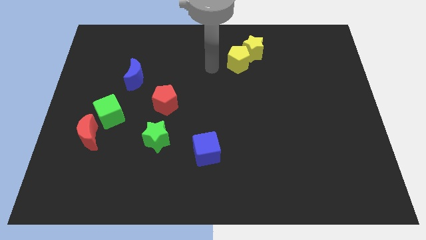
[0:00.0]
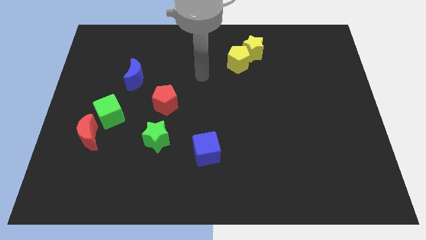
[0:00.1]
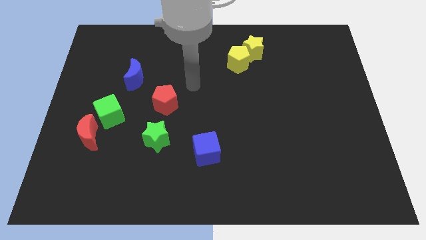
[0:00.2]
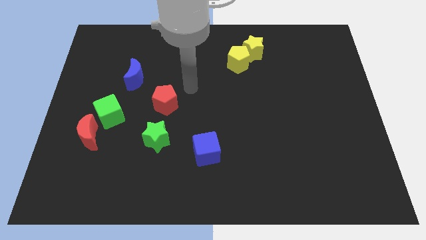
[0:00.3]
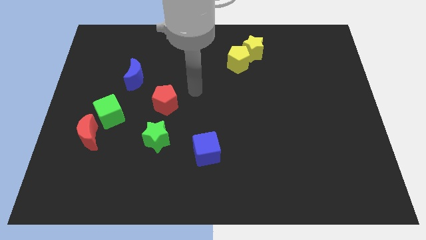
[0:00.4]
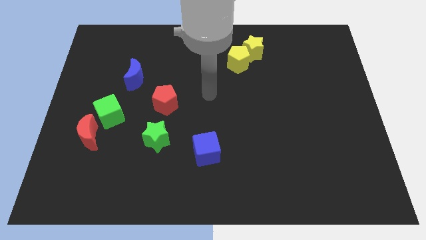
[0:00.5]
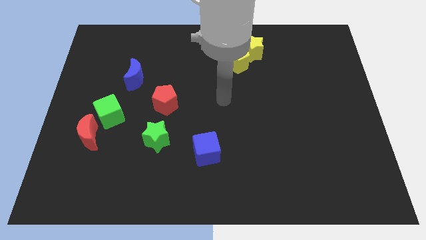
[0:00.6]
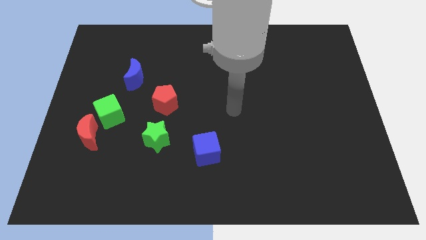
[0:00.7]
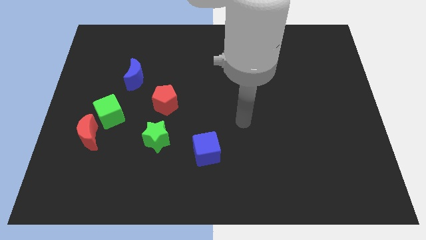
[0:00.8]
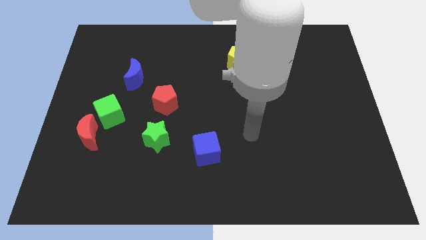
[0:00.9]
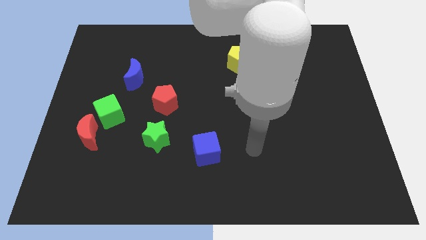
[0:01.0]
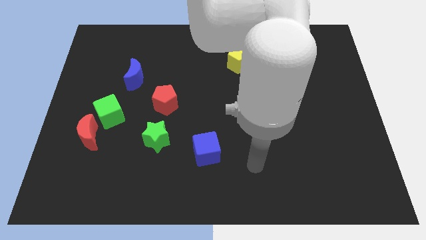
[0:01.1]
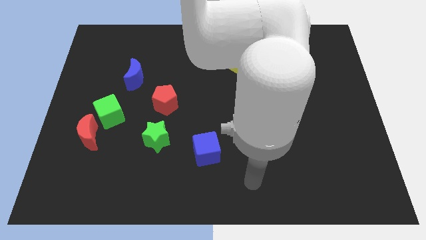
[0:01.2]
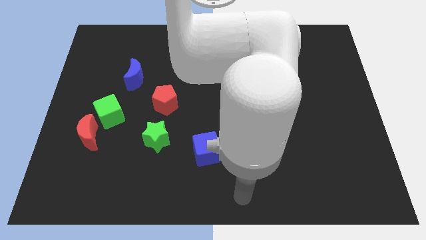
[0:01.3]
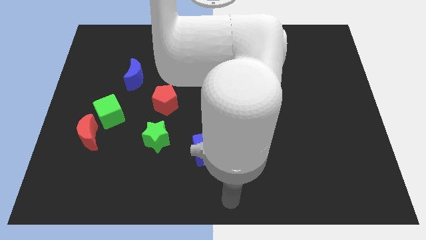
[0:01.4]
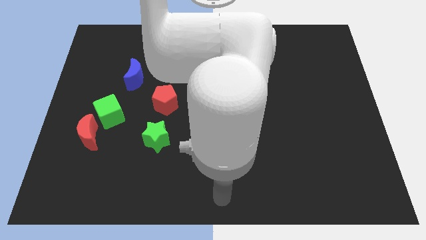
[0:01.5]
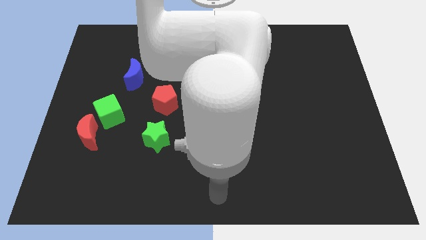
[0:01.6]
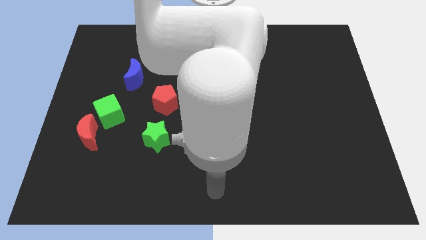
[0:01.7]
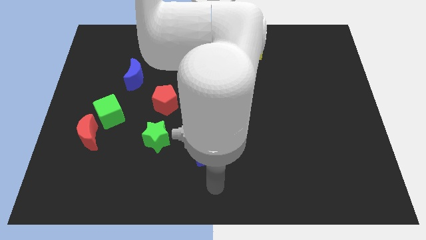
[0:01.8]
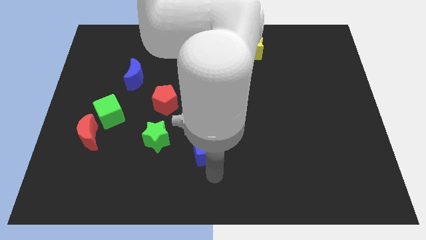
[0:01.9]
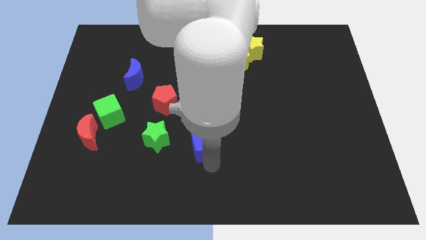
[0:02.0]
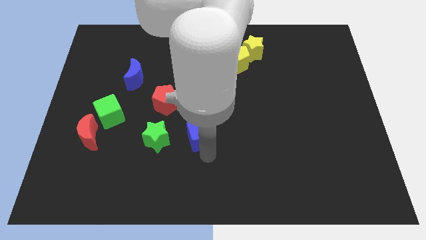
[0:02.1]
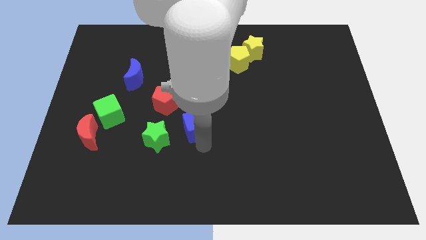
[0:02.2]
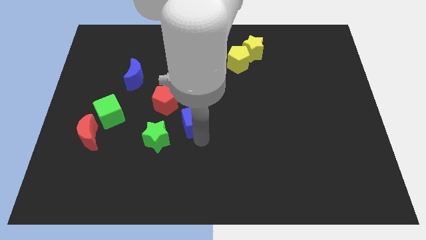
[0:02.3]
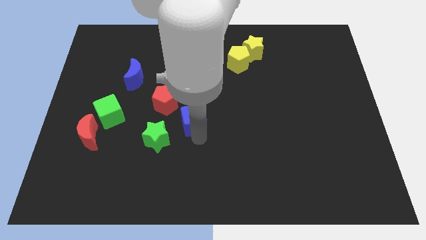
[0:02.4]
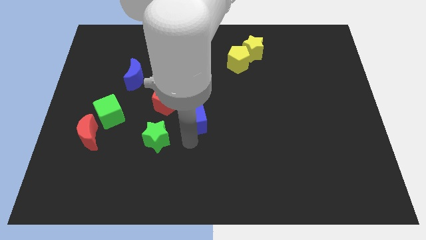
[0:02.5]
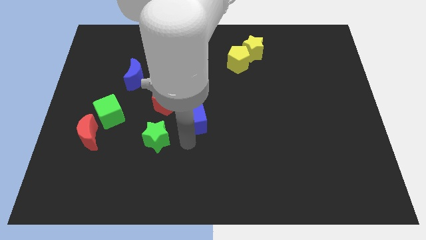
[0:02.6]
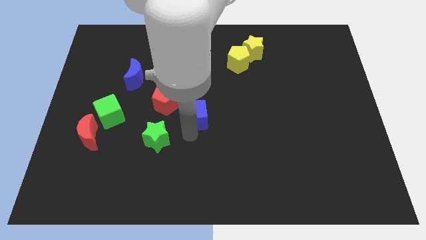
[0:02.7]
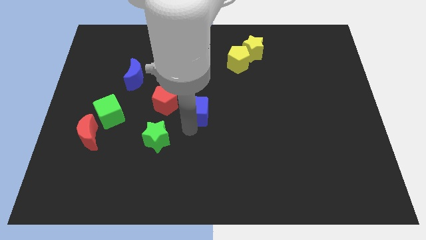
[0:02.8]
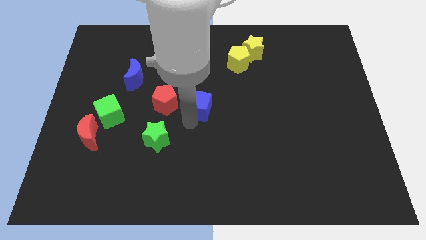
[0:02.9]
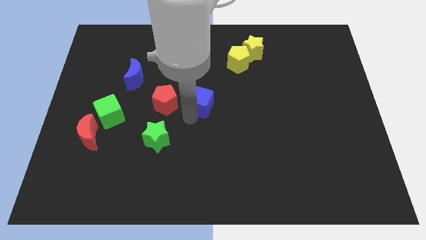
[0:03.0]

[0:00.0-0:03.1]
drag the blue cube to the right side of the red pentagon

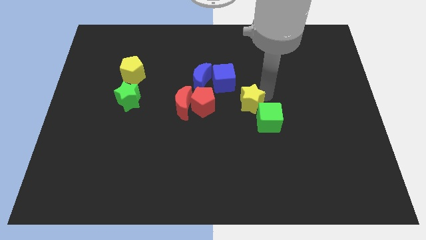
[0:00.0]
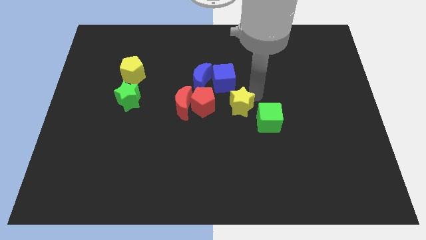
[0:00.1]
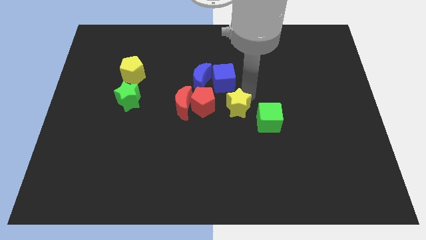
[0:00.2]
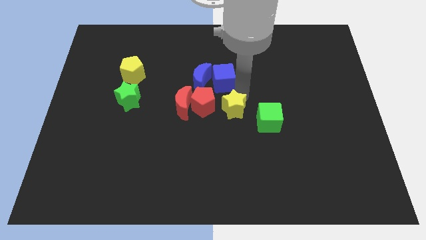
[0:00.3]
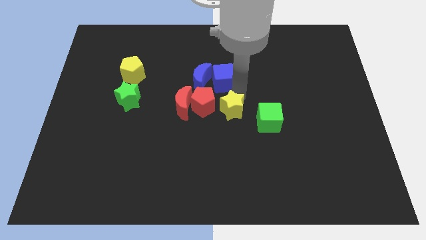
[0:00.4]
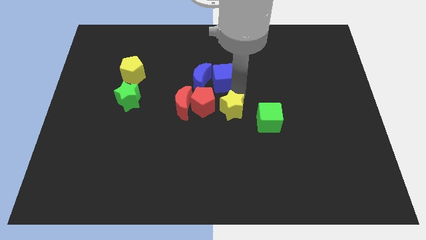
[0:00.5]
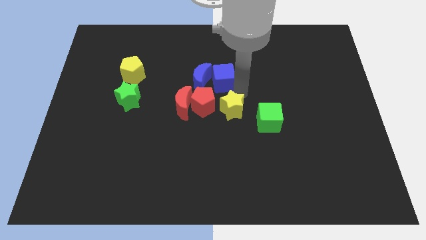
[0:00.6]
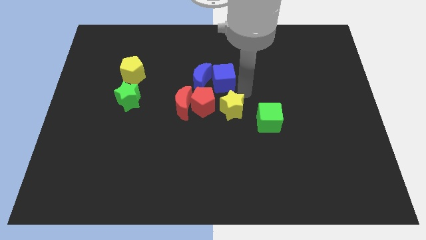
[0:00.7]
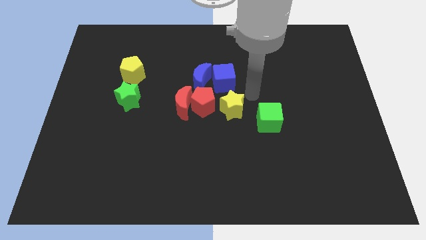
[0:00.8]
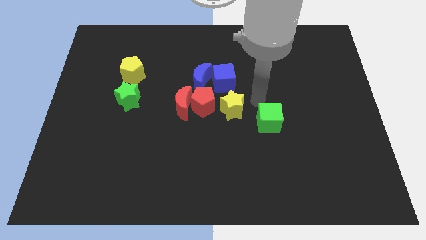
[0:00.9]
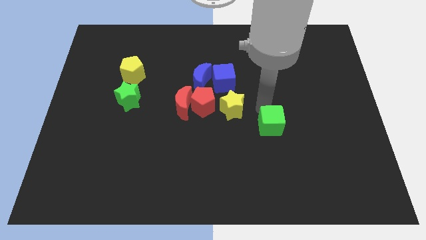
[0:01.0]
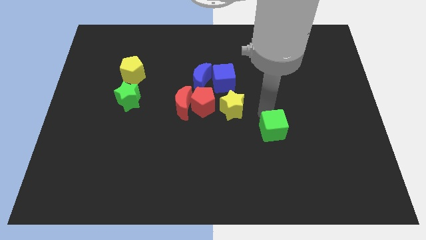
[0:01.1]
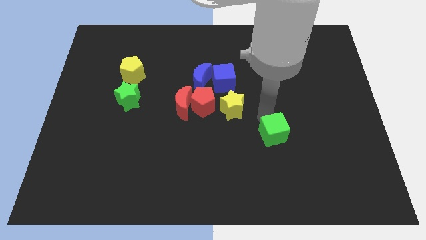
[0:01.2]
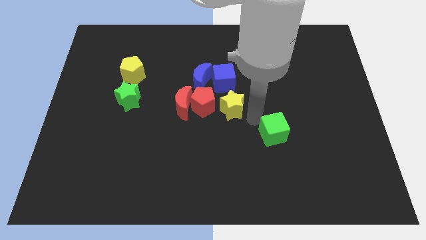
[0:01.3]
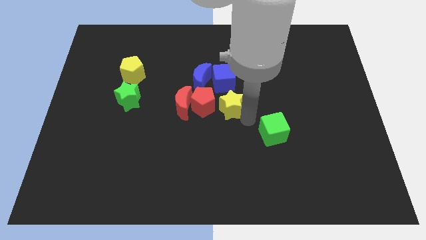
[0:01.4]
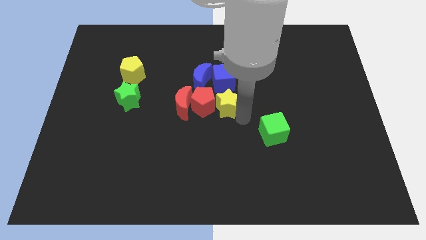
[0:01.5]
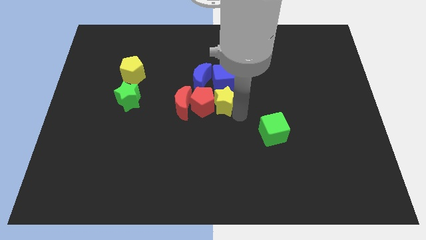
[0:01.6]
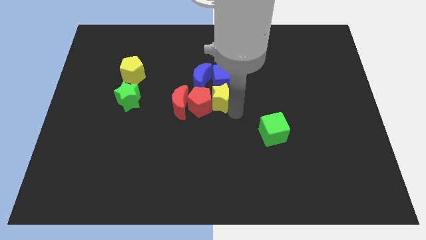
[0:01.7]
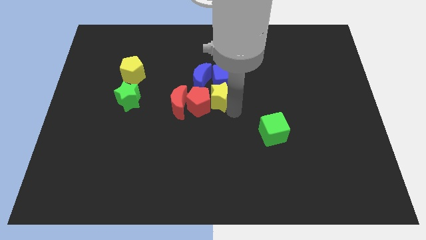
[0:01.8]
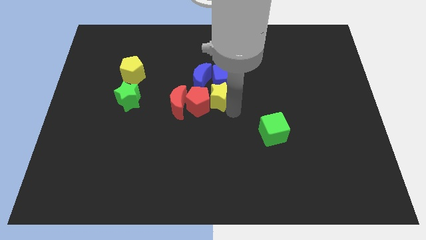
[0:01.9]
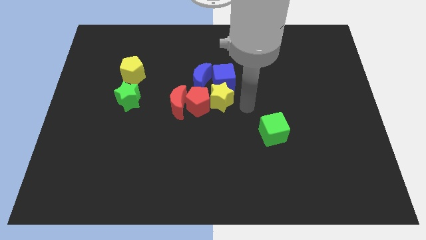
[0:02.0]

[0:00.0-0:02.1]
push the yellow star into the red pentagon

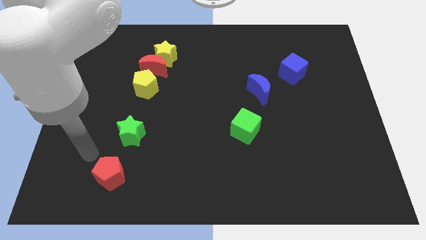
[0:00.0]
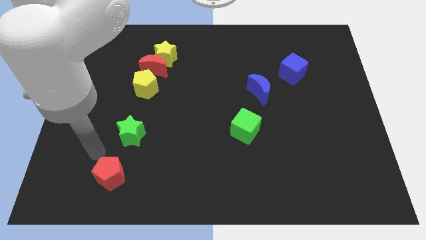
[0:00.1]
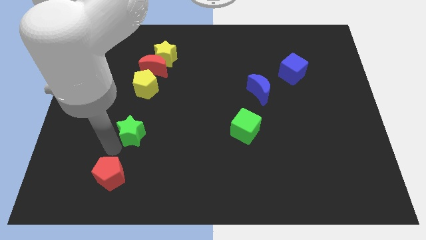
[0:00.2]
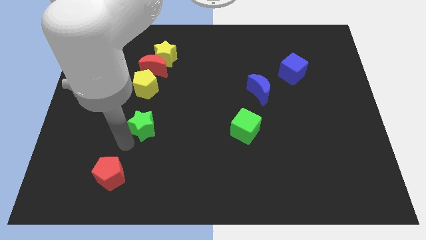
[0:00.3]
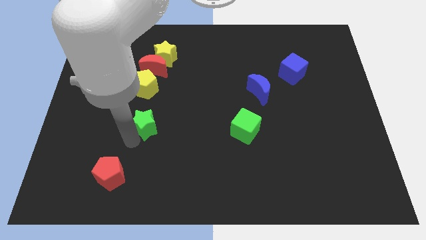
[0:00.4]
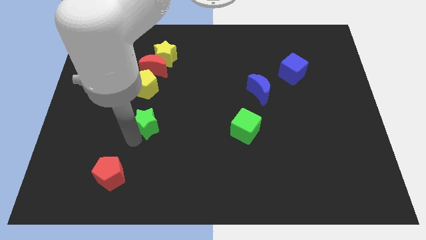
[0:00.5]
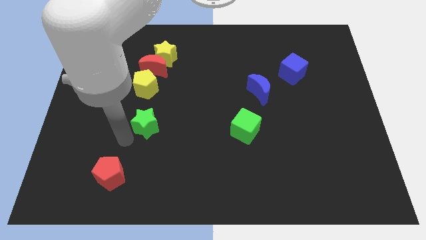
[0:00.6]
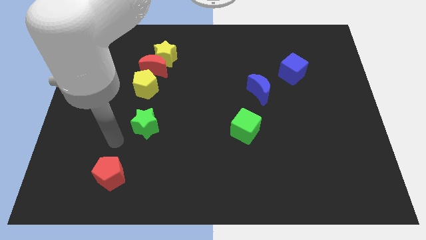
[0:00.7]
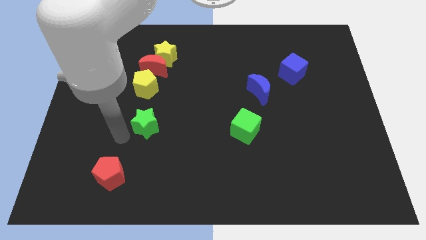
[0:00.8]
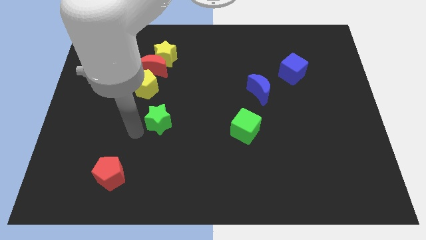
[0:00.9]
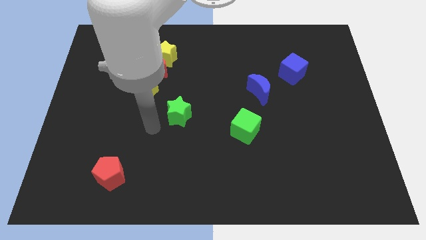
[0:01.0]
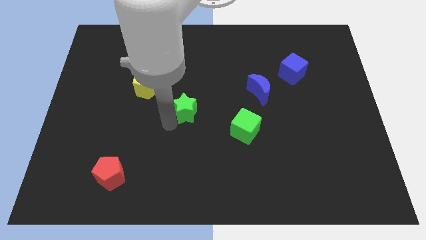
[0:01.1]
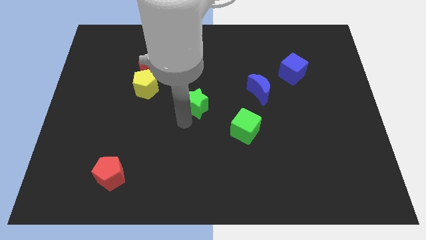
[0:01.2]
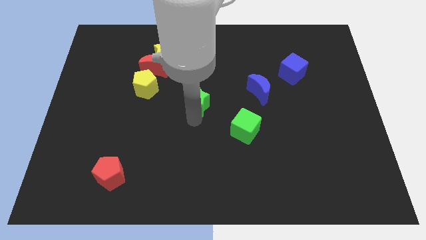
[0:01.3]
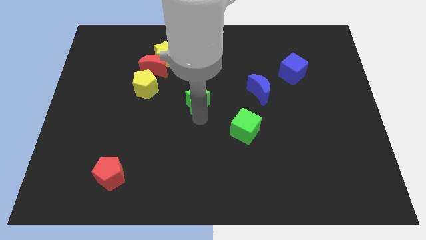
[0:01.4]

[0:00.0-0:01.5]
place the green star diagonally in between the green cube and yellow pentagon

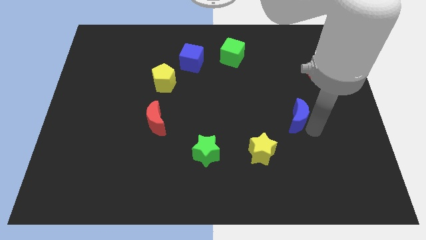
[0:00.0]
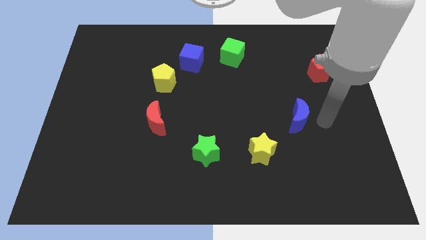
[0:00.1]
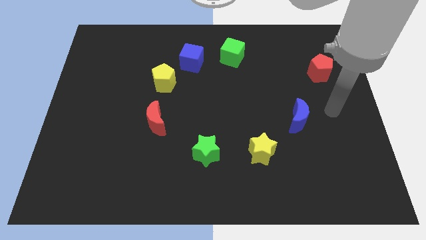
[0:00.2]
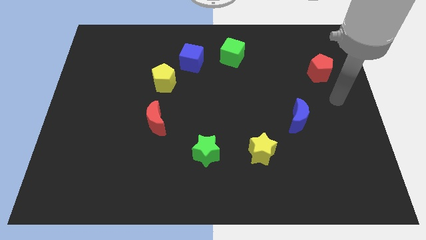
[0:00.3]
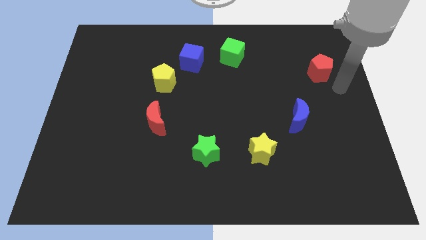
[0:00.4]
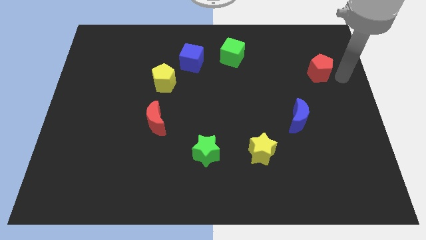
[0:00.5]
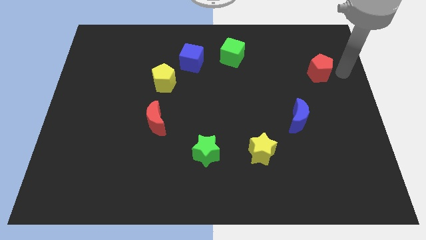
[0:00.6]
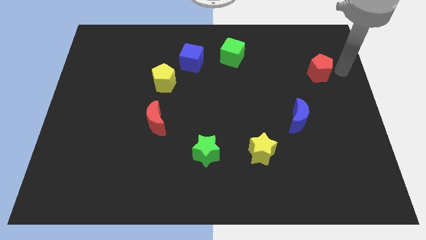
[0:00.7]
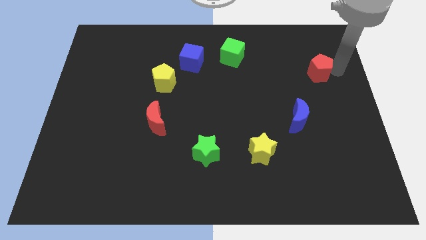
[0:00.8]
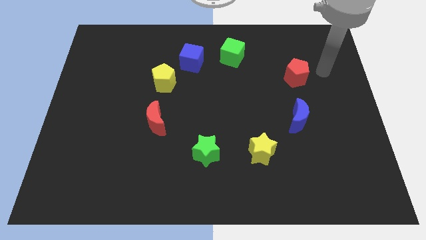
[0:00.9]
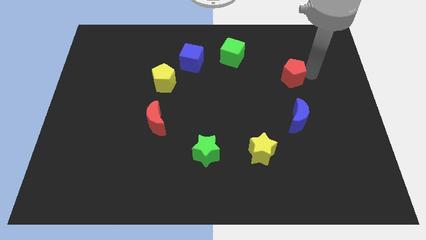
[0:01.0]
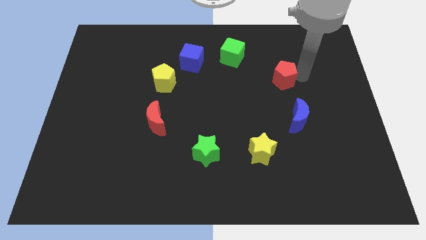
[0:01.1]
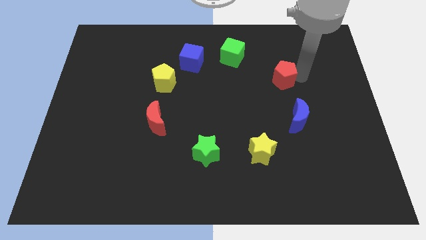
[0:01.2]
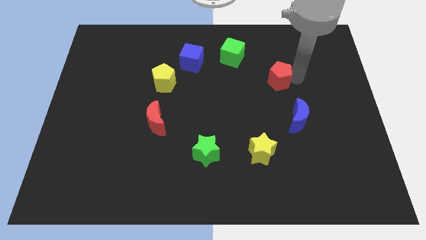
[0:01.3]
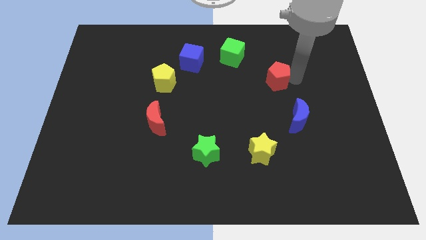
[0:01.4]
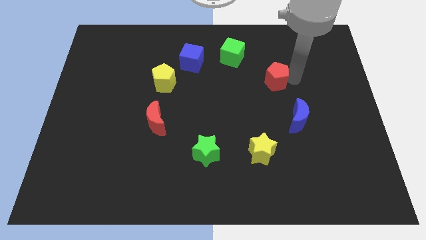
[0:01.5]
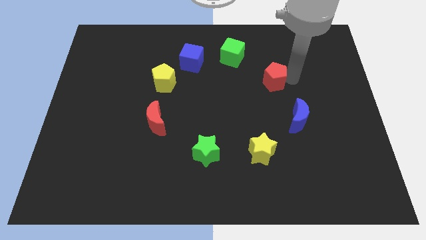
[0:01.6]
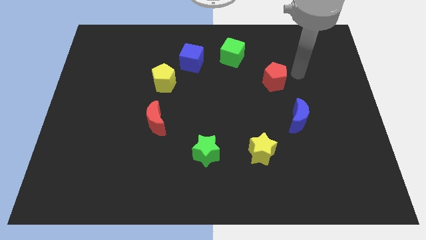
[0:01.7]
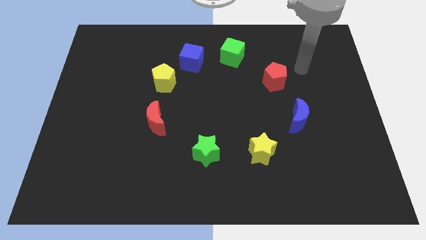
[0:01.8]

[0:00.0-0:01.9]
move the red pentagon diagonally to the green cube

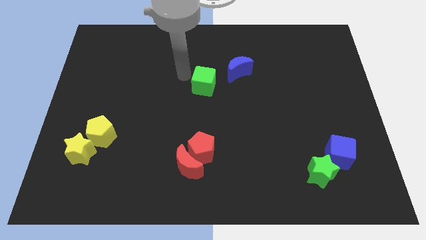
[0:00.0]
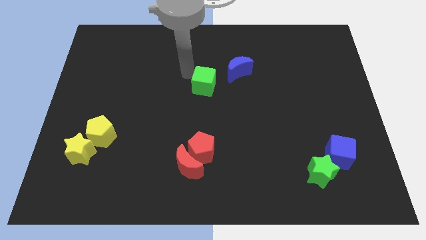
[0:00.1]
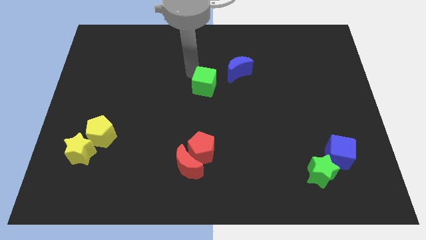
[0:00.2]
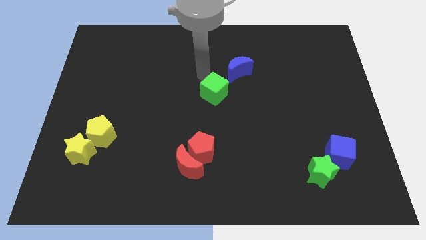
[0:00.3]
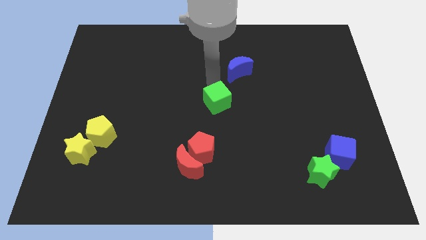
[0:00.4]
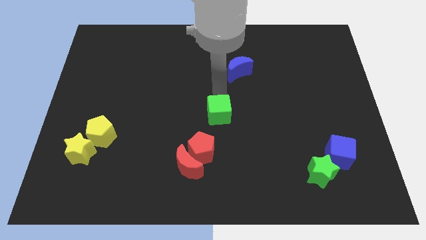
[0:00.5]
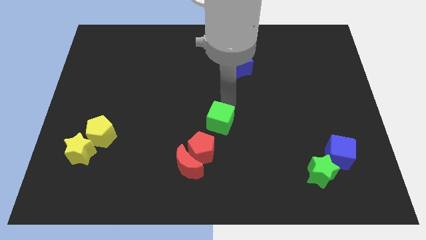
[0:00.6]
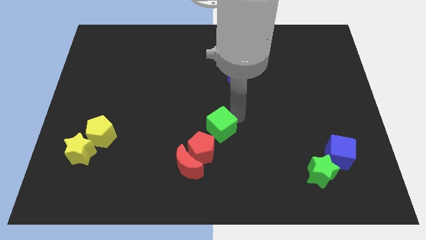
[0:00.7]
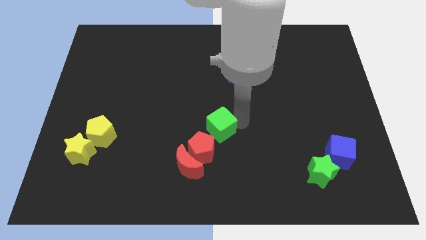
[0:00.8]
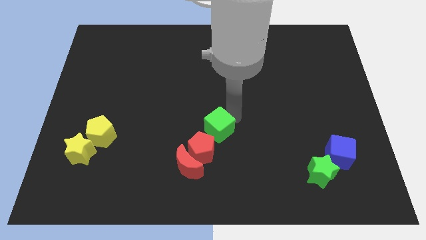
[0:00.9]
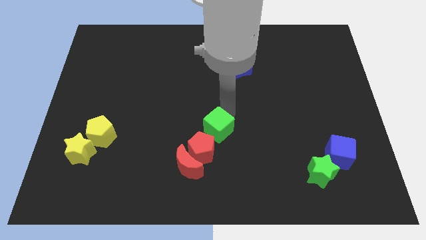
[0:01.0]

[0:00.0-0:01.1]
slide the green cube diagonally top right to the red pentagon
